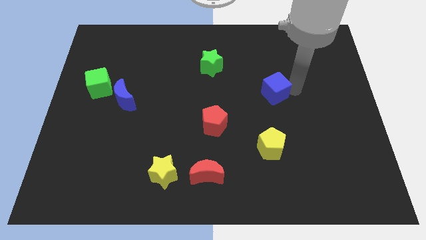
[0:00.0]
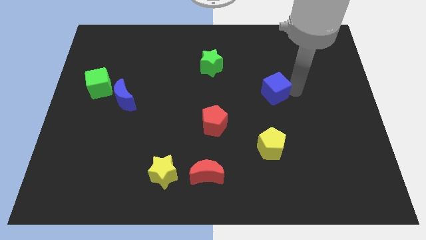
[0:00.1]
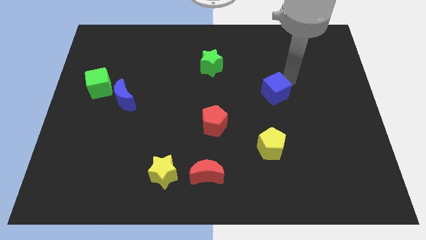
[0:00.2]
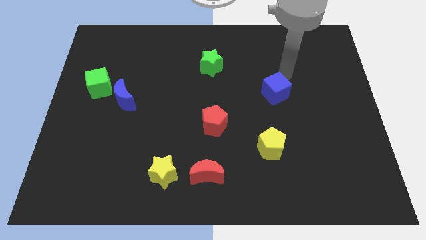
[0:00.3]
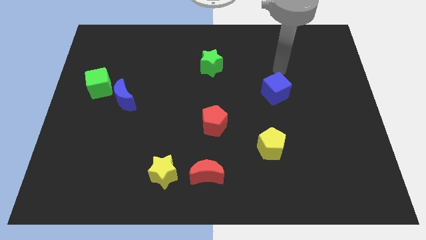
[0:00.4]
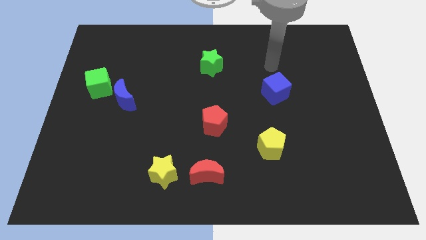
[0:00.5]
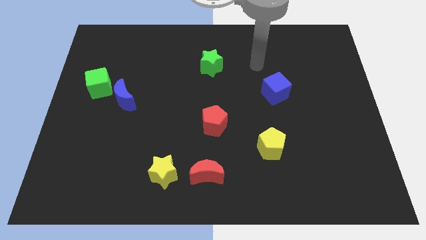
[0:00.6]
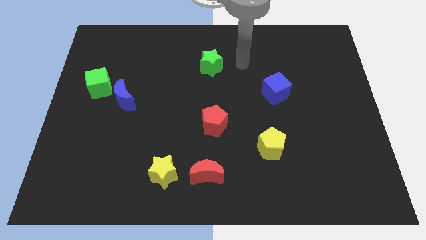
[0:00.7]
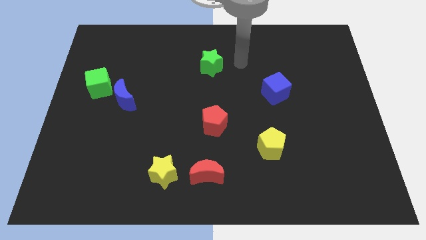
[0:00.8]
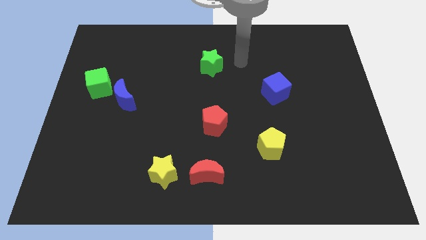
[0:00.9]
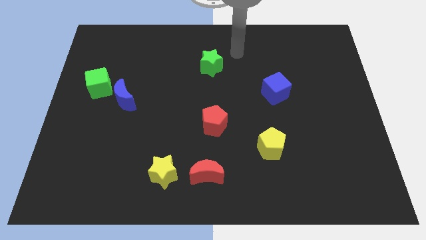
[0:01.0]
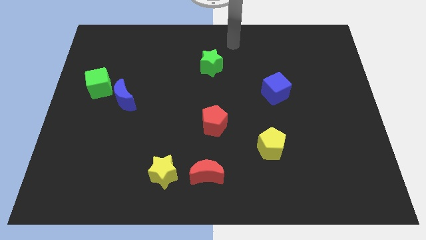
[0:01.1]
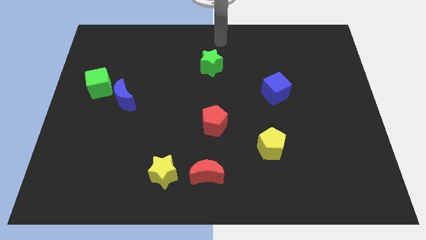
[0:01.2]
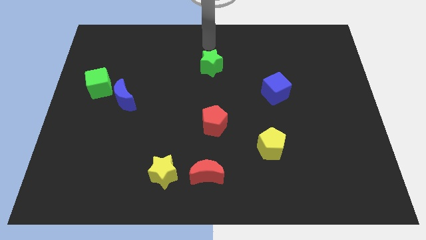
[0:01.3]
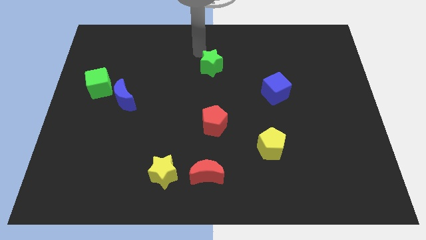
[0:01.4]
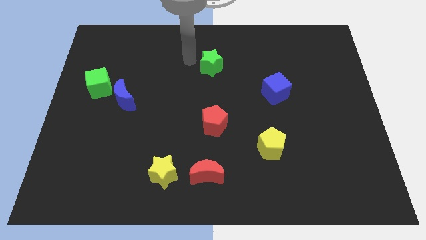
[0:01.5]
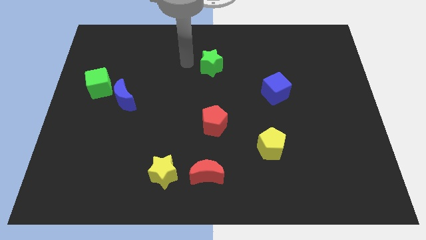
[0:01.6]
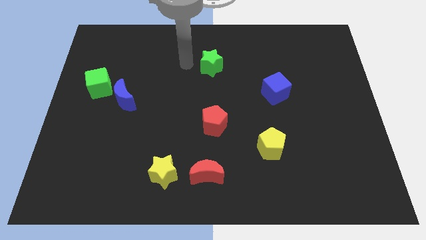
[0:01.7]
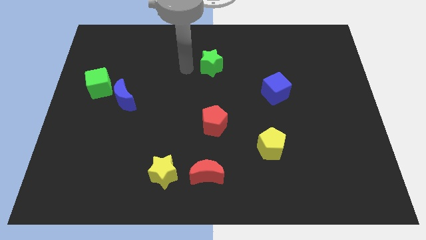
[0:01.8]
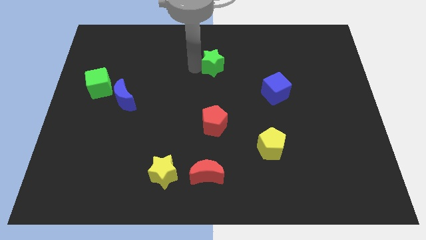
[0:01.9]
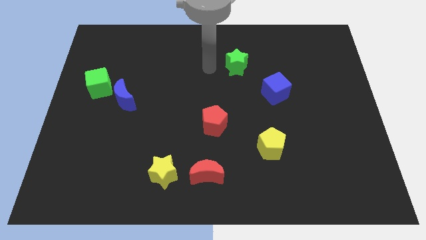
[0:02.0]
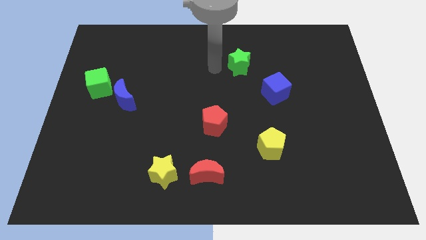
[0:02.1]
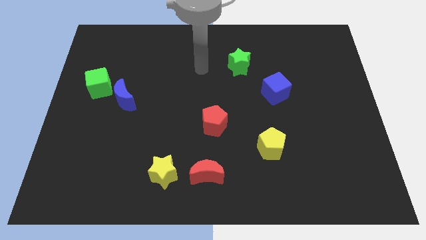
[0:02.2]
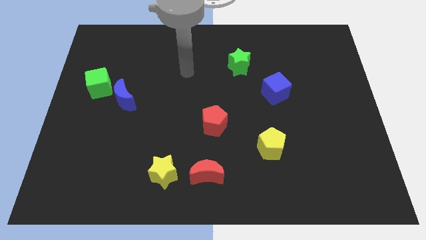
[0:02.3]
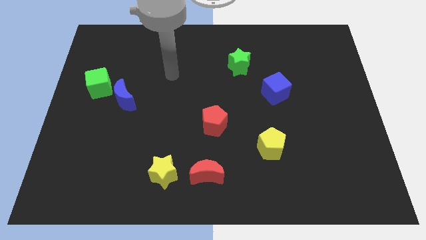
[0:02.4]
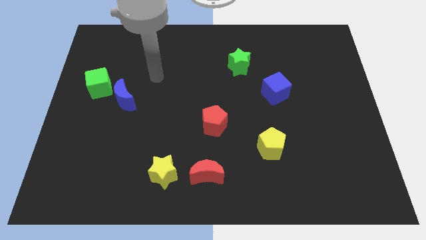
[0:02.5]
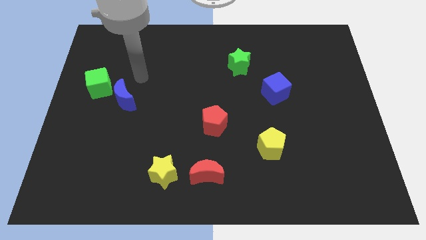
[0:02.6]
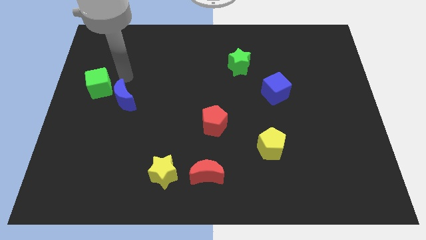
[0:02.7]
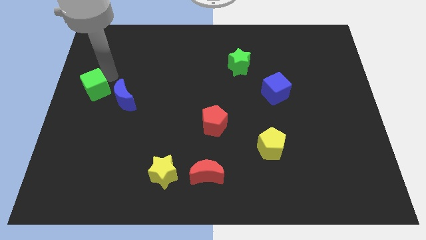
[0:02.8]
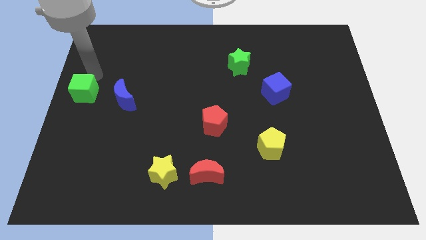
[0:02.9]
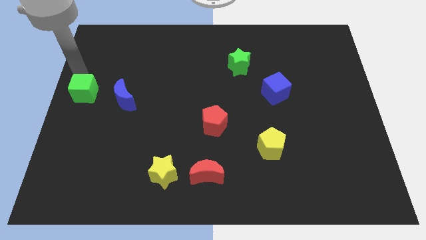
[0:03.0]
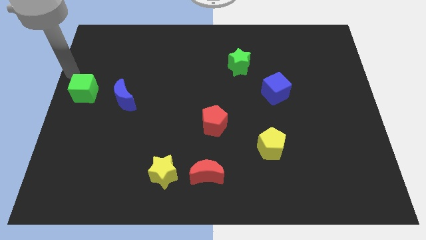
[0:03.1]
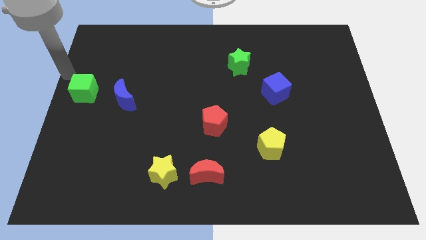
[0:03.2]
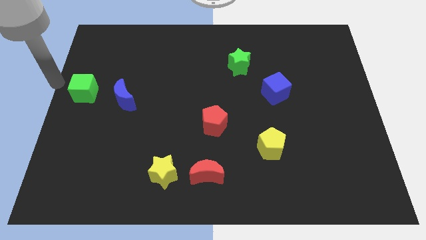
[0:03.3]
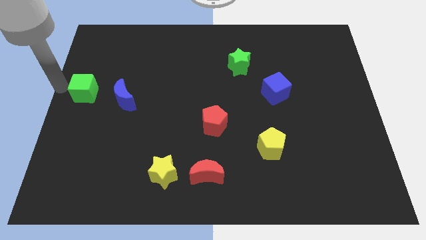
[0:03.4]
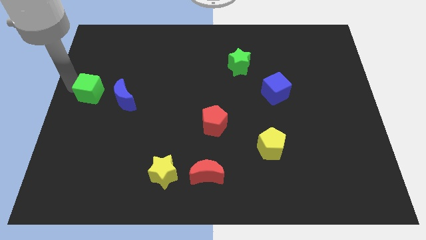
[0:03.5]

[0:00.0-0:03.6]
slightly move the green cube to the left side

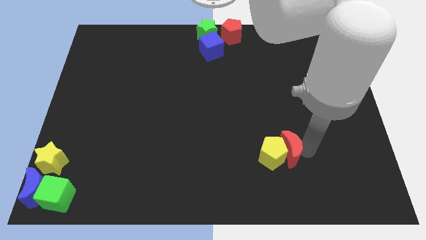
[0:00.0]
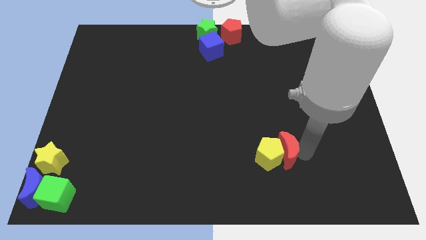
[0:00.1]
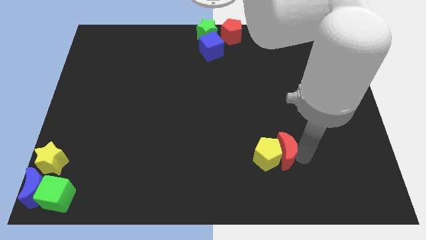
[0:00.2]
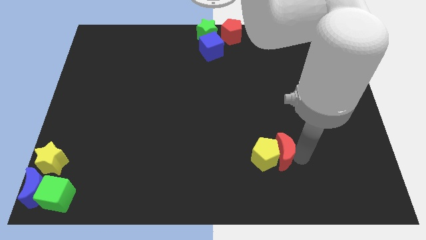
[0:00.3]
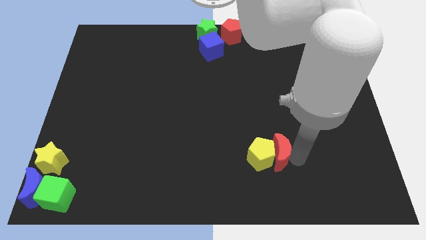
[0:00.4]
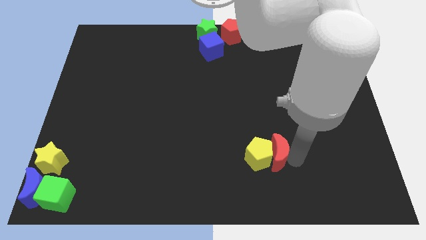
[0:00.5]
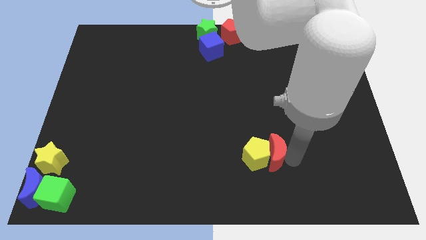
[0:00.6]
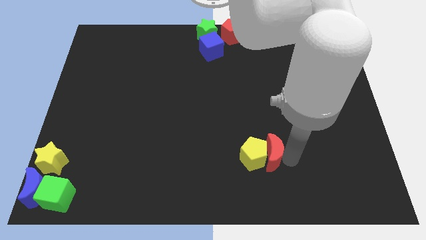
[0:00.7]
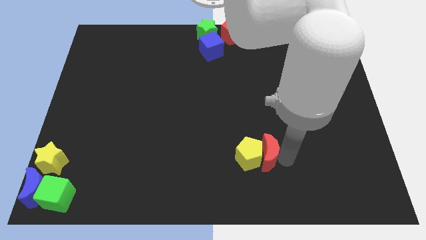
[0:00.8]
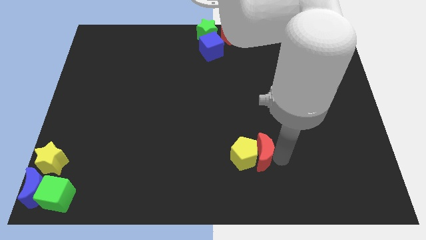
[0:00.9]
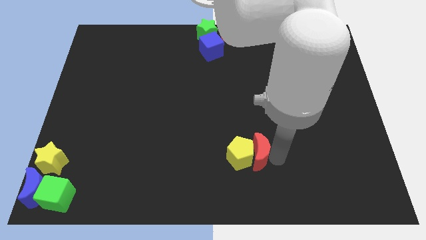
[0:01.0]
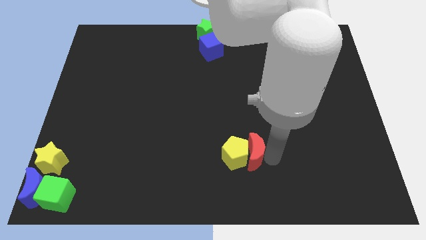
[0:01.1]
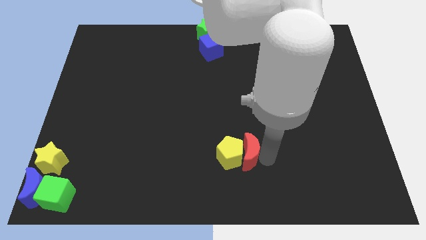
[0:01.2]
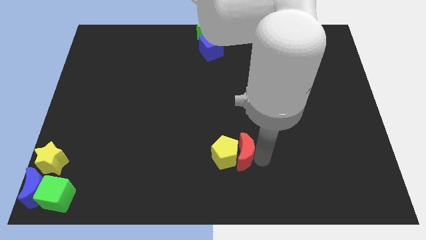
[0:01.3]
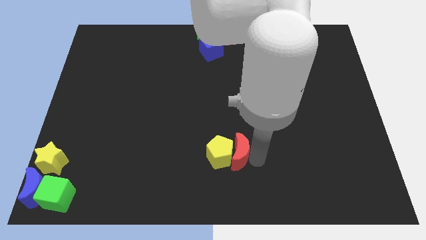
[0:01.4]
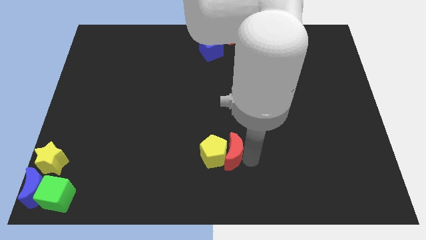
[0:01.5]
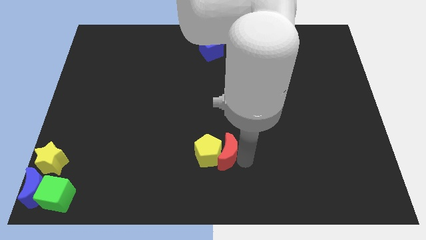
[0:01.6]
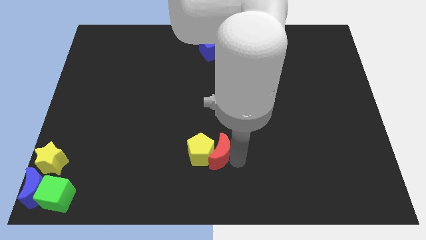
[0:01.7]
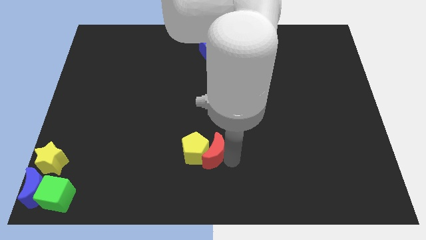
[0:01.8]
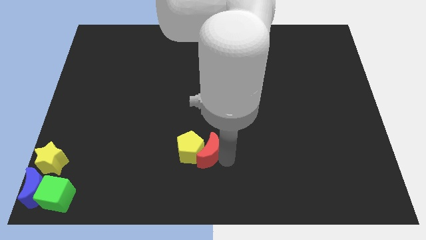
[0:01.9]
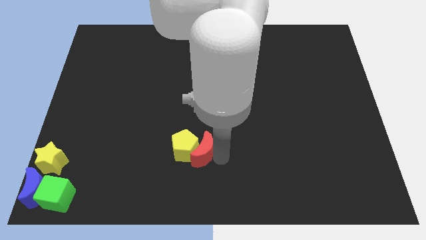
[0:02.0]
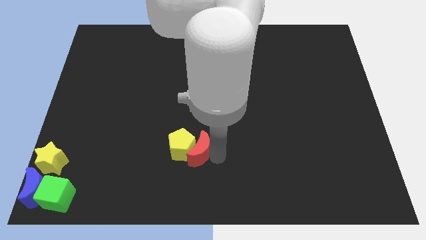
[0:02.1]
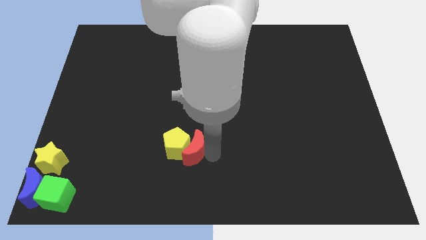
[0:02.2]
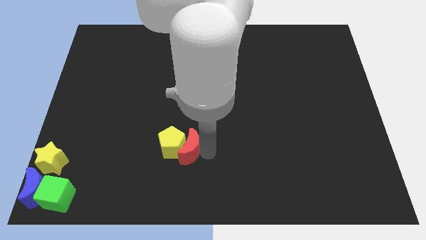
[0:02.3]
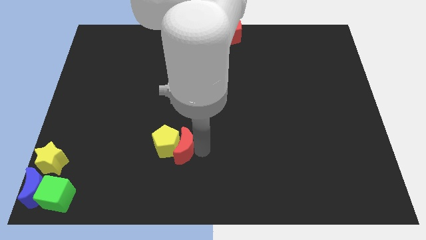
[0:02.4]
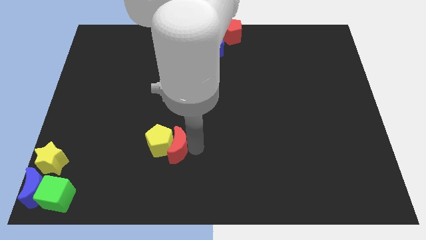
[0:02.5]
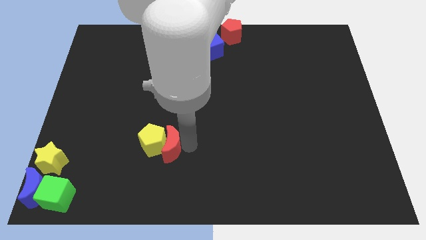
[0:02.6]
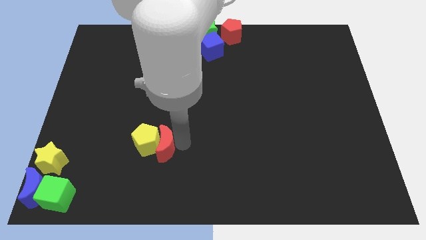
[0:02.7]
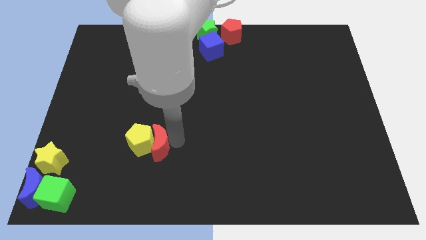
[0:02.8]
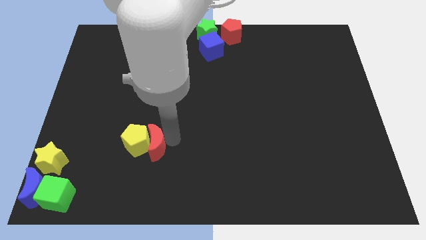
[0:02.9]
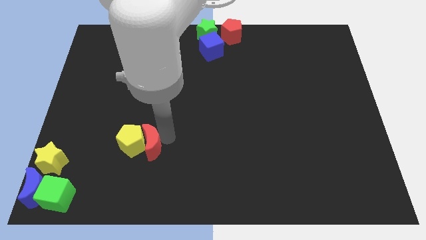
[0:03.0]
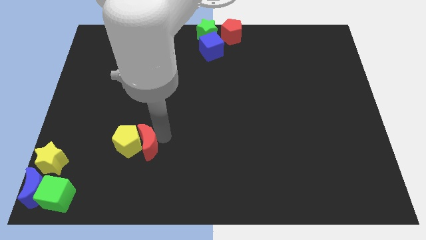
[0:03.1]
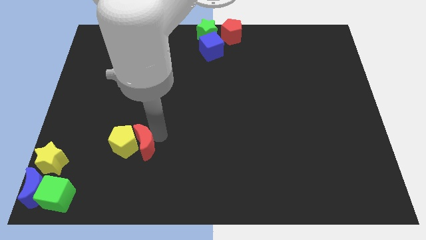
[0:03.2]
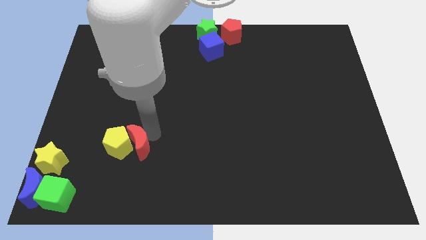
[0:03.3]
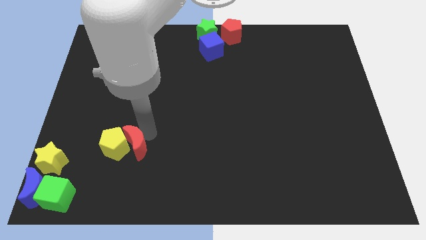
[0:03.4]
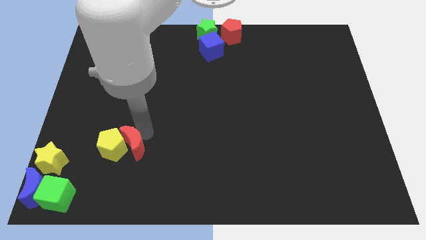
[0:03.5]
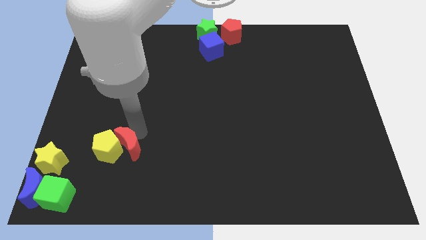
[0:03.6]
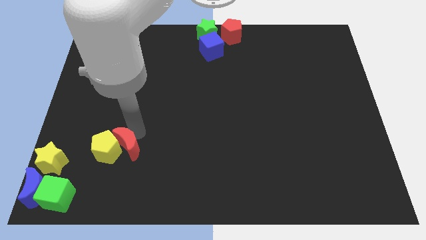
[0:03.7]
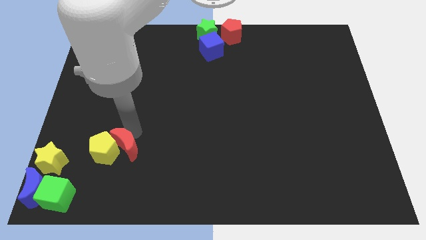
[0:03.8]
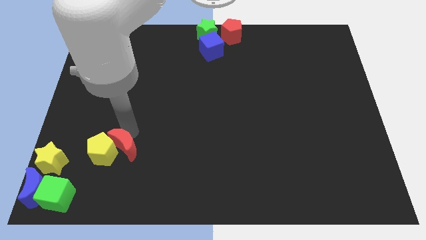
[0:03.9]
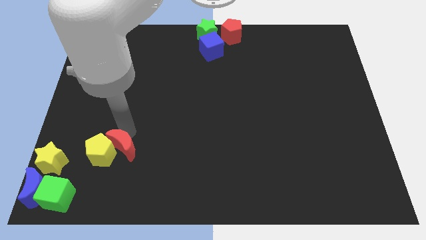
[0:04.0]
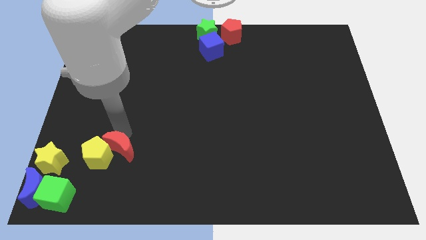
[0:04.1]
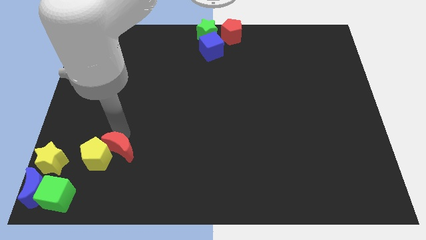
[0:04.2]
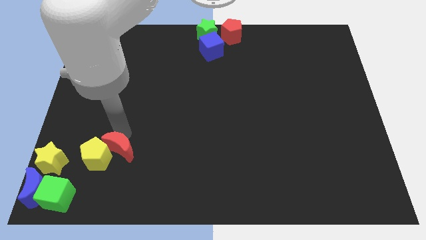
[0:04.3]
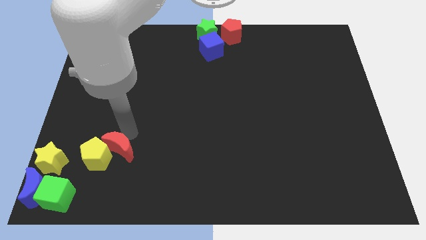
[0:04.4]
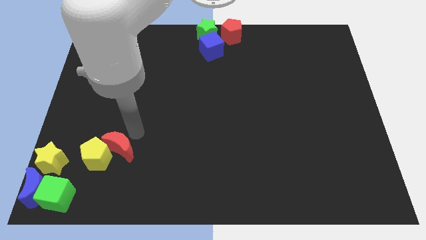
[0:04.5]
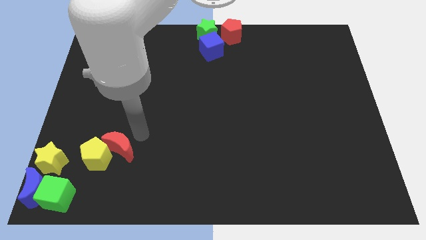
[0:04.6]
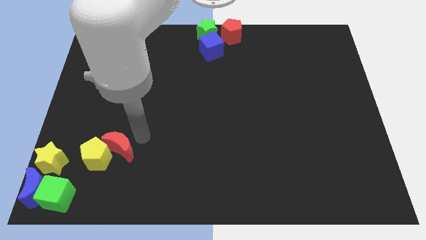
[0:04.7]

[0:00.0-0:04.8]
move the yellow pentagon and red moon close to the yellow star

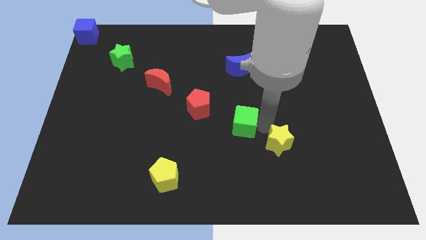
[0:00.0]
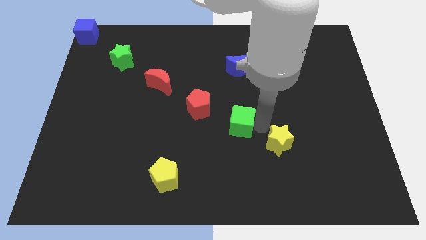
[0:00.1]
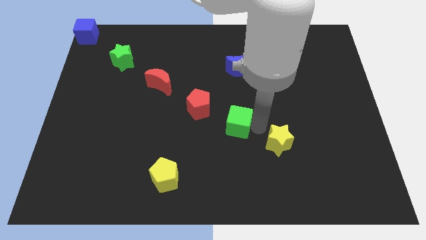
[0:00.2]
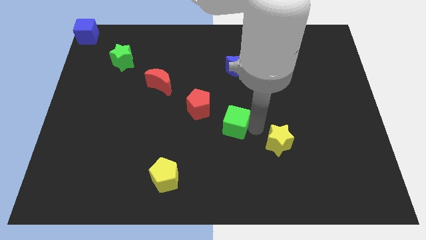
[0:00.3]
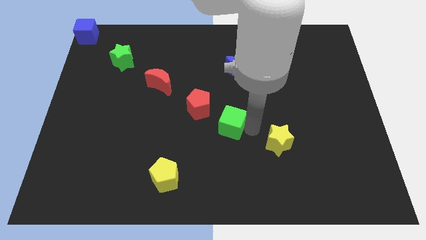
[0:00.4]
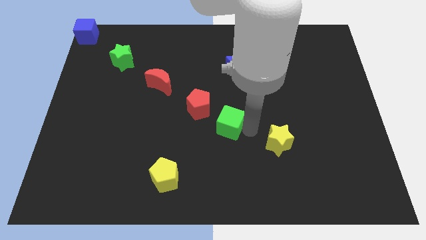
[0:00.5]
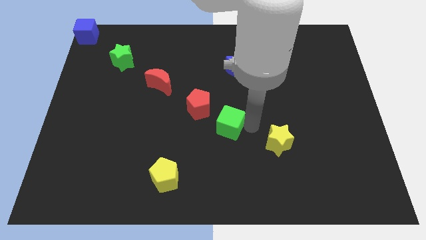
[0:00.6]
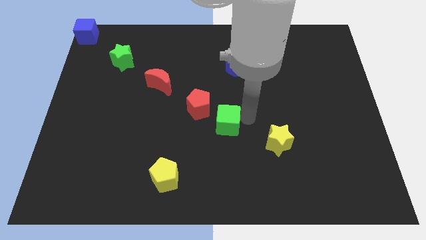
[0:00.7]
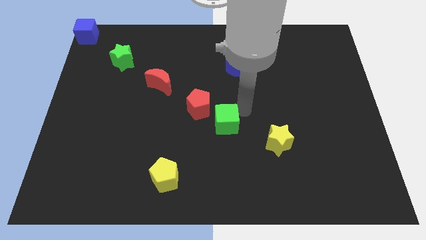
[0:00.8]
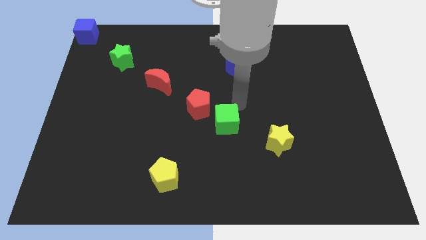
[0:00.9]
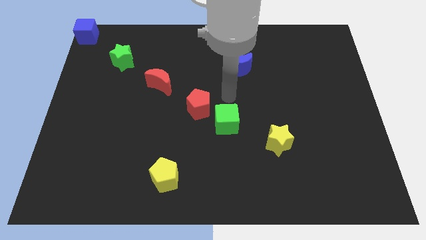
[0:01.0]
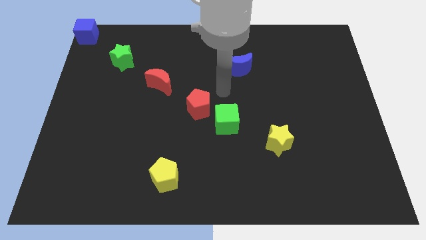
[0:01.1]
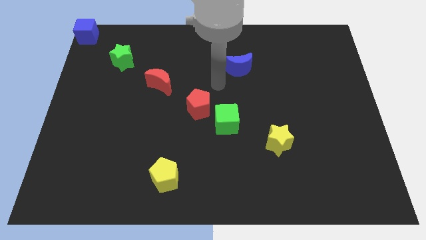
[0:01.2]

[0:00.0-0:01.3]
push the green cube close to the red pentagon
